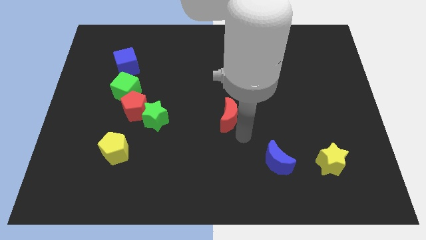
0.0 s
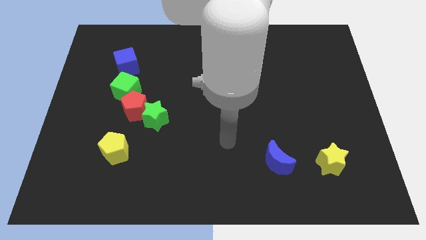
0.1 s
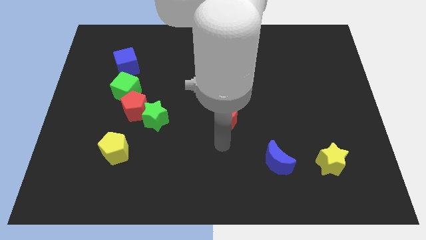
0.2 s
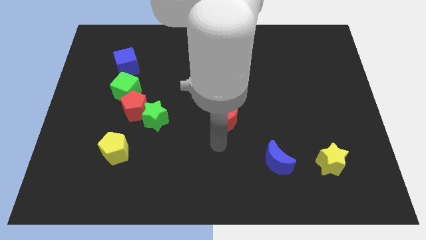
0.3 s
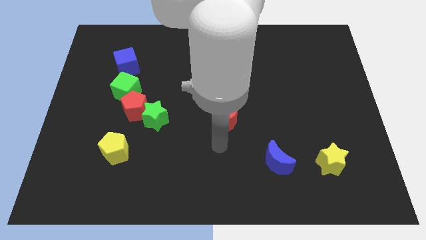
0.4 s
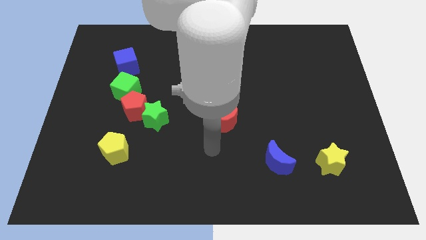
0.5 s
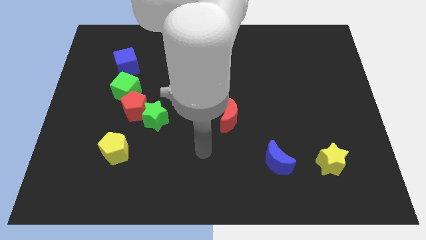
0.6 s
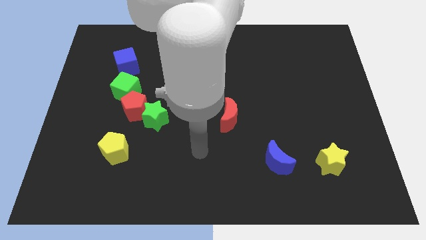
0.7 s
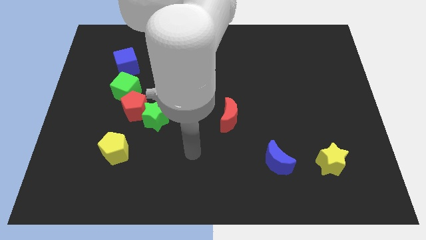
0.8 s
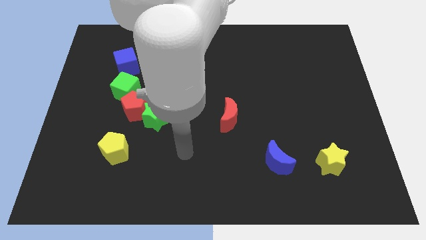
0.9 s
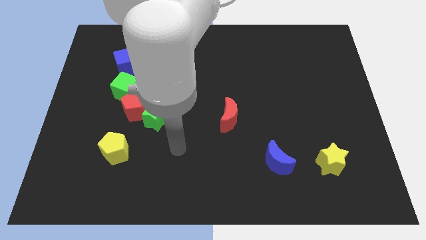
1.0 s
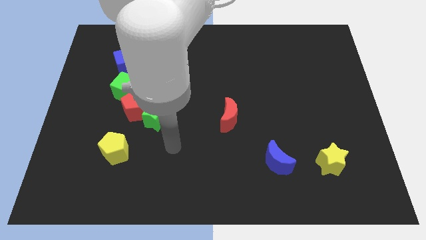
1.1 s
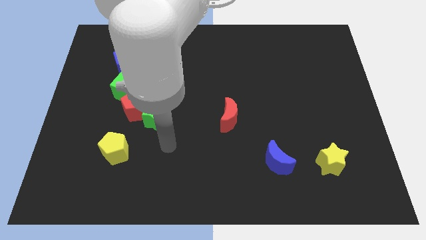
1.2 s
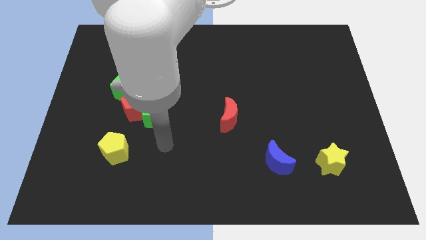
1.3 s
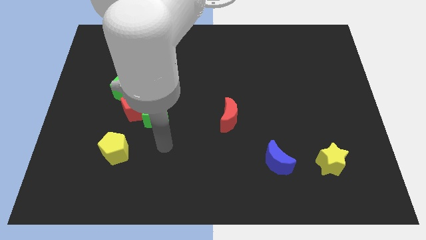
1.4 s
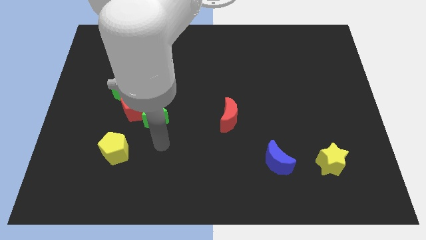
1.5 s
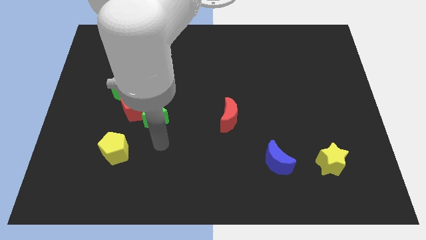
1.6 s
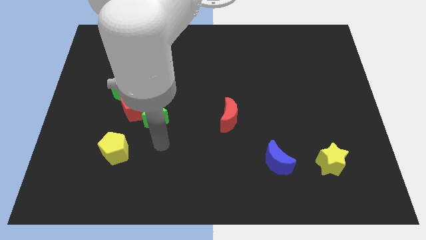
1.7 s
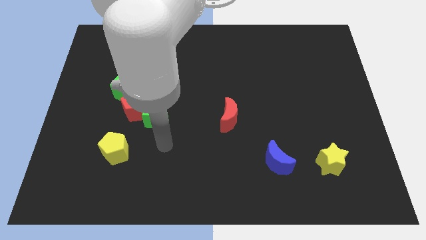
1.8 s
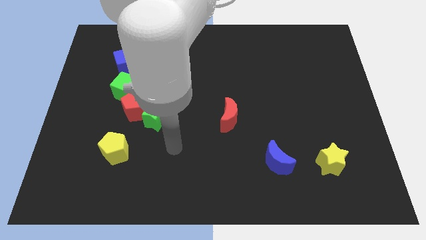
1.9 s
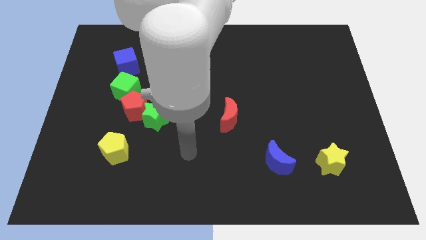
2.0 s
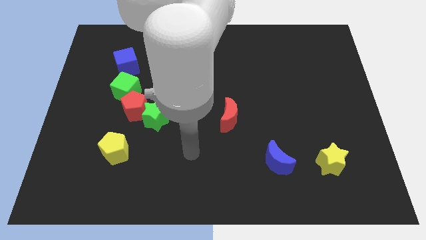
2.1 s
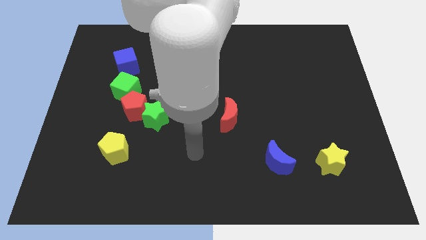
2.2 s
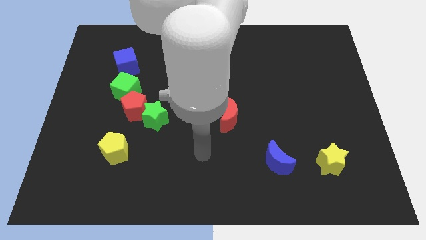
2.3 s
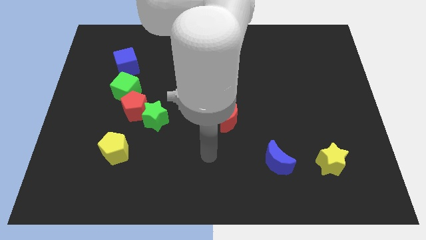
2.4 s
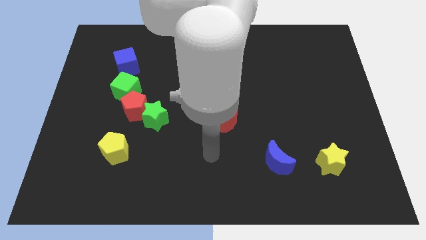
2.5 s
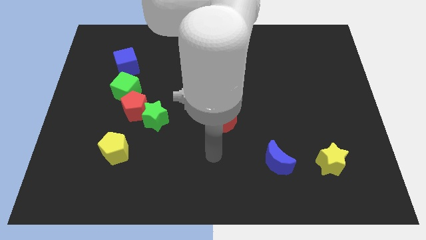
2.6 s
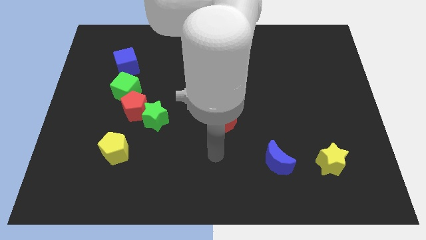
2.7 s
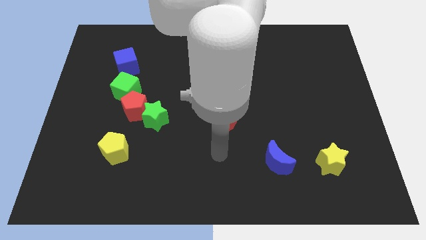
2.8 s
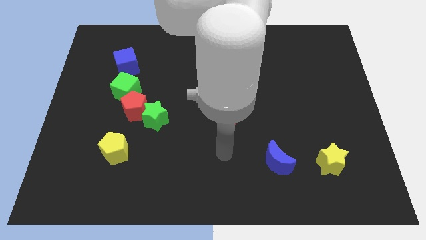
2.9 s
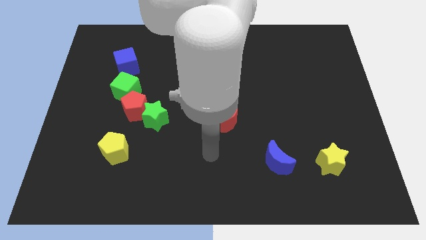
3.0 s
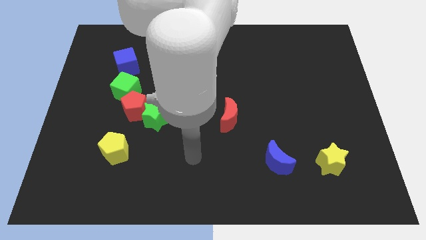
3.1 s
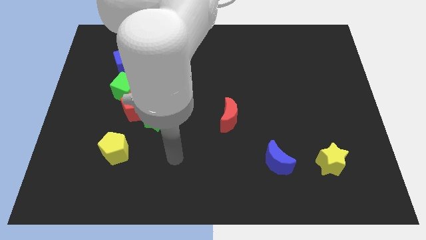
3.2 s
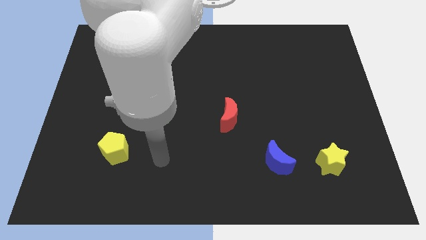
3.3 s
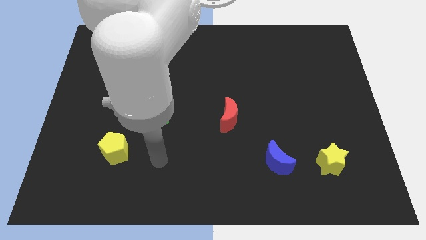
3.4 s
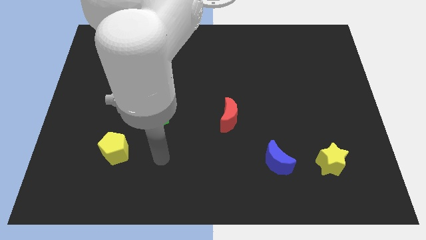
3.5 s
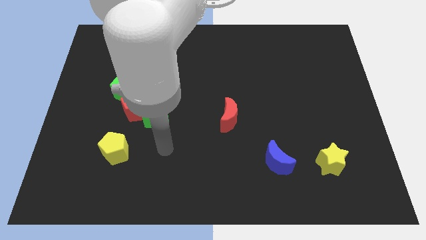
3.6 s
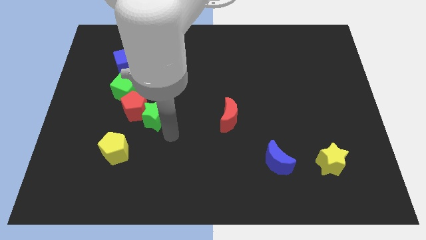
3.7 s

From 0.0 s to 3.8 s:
place arm in between yellow pentagon and red crescent

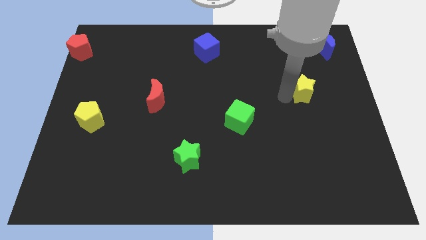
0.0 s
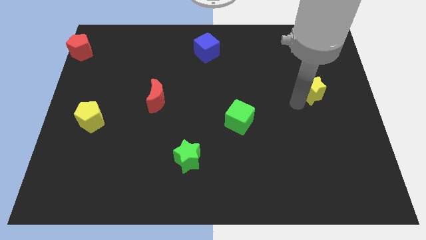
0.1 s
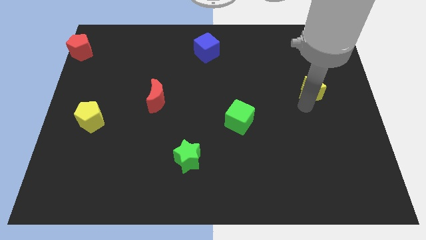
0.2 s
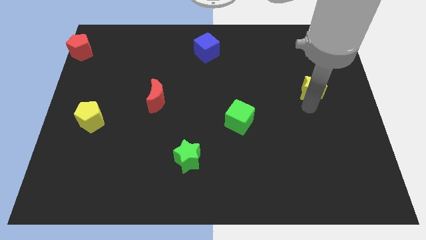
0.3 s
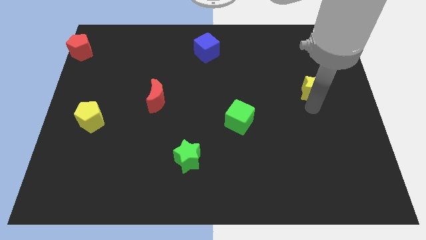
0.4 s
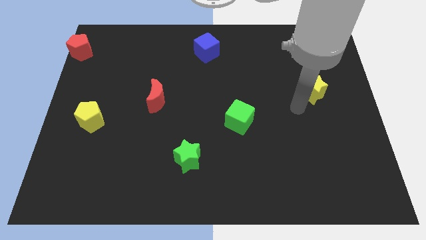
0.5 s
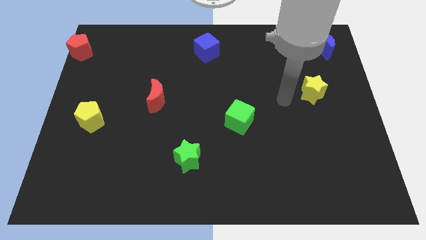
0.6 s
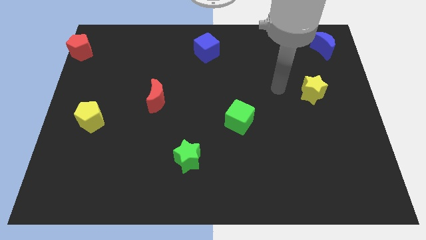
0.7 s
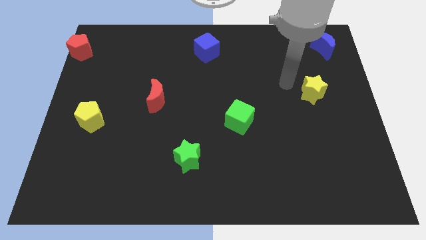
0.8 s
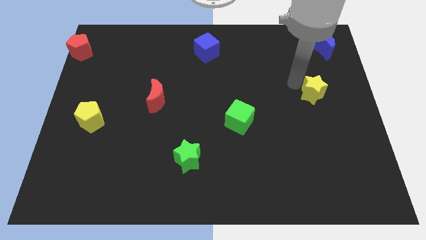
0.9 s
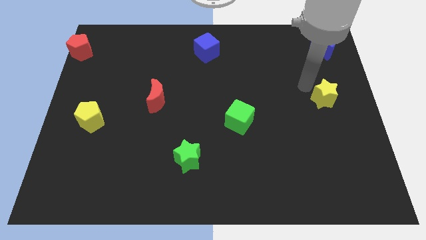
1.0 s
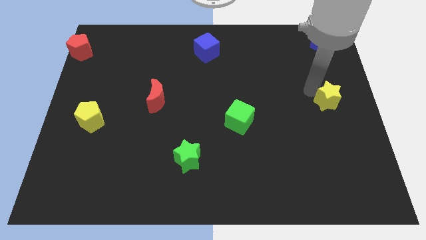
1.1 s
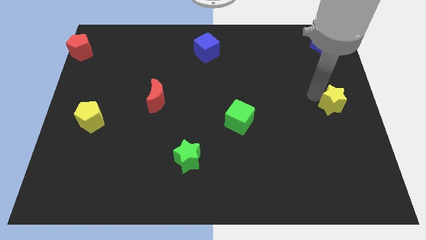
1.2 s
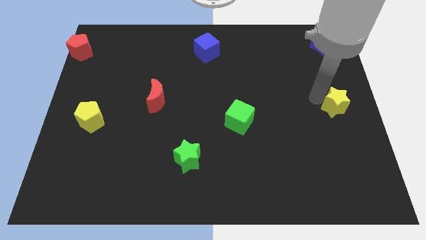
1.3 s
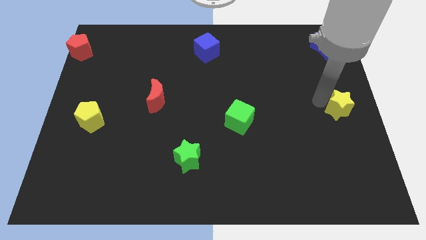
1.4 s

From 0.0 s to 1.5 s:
move the yellow star to the right center

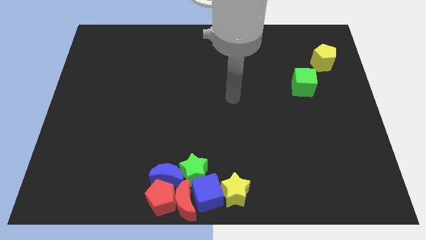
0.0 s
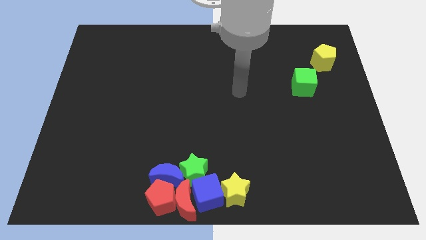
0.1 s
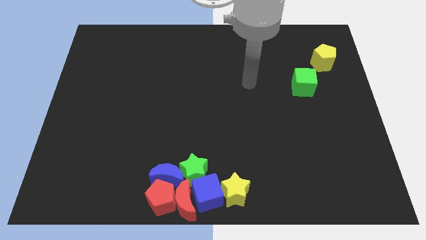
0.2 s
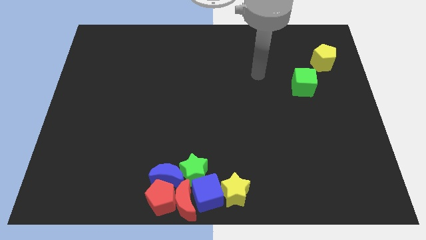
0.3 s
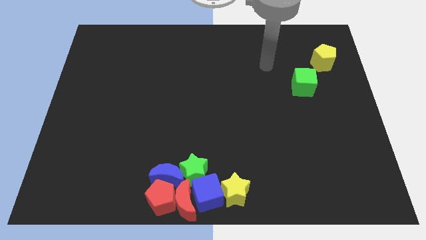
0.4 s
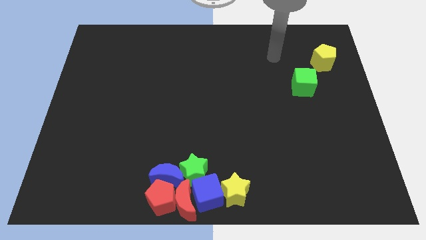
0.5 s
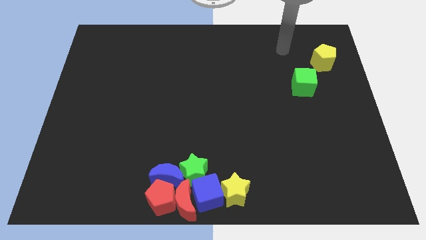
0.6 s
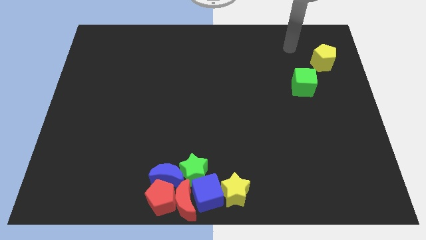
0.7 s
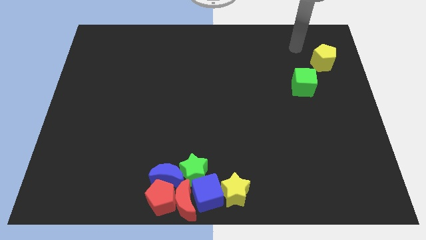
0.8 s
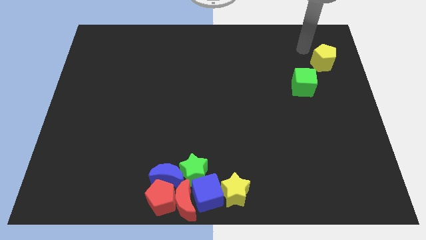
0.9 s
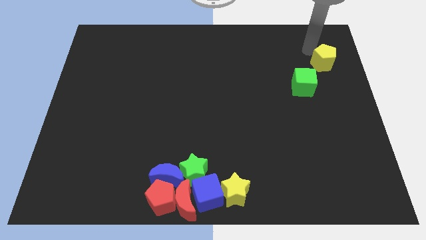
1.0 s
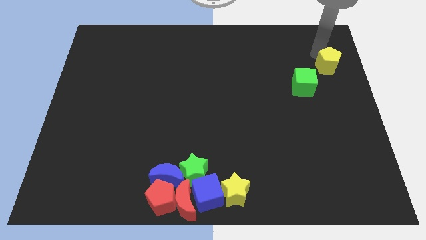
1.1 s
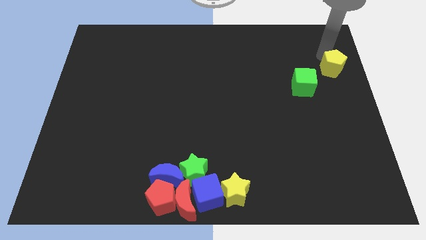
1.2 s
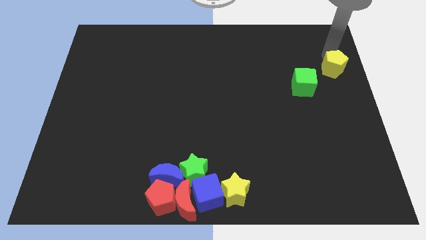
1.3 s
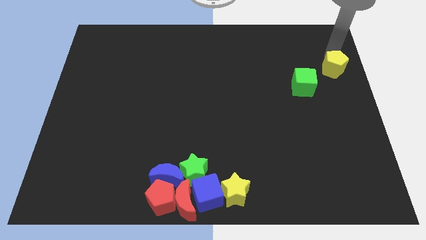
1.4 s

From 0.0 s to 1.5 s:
touch the left of the yellow pentagon

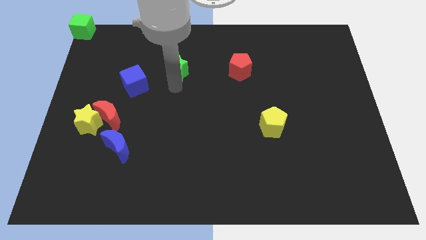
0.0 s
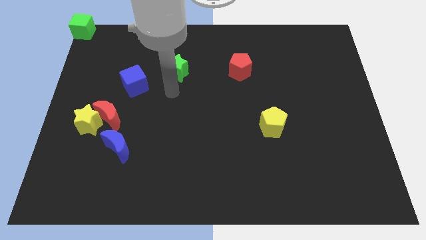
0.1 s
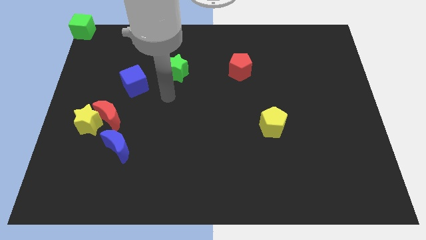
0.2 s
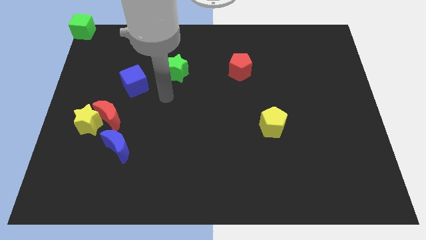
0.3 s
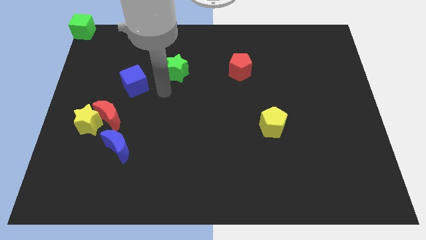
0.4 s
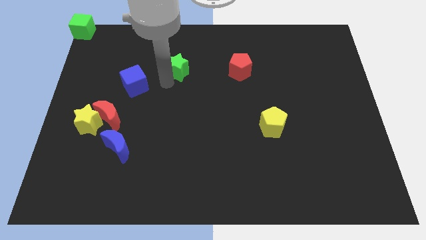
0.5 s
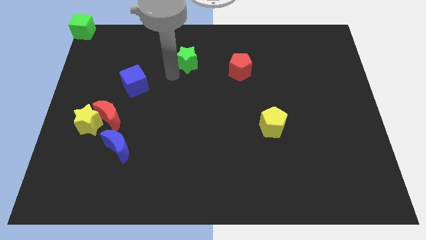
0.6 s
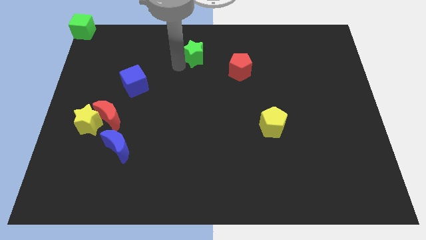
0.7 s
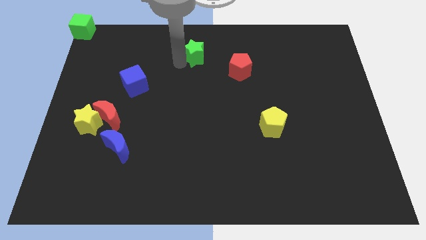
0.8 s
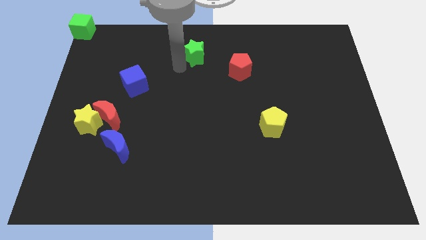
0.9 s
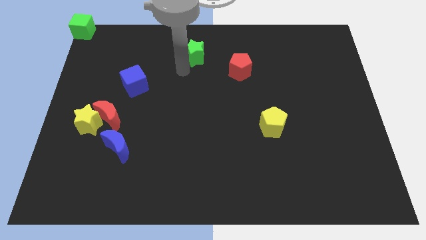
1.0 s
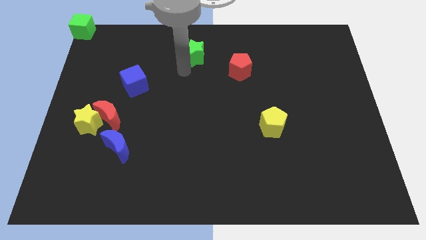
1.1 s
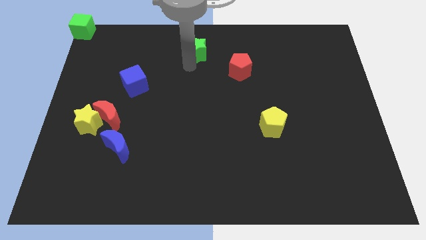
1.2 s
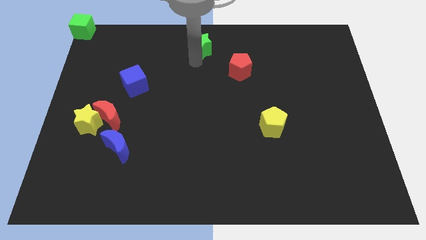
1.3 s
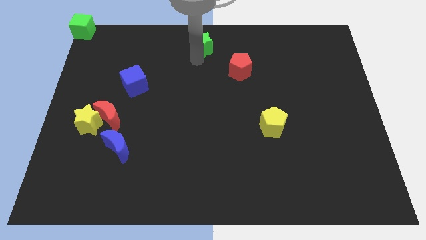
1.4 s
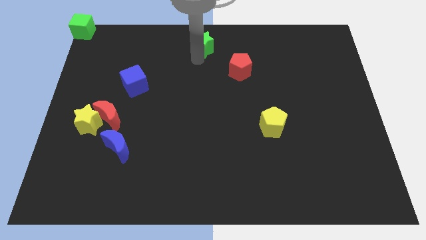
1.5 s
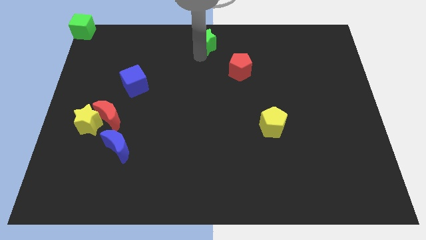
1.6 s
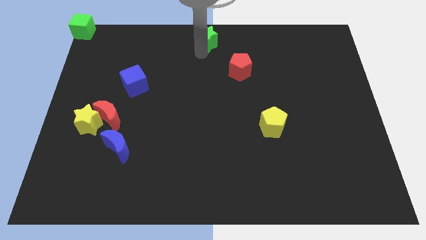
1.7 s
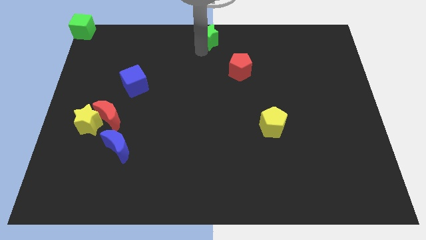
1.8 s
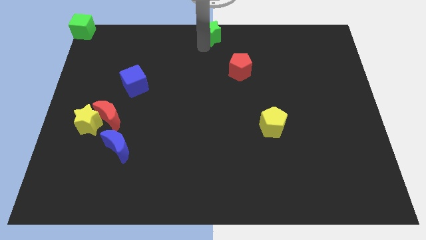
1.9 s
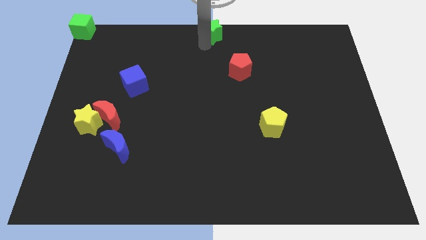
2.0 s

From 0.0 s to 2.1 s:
move the green star to the top center of the board
